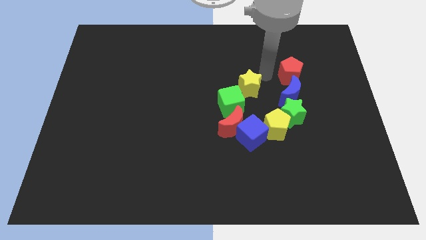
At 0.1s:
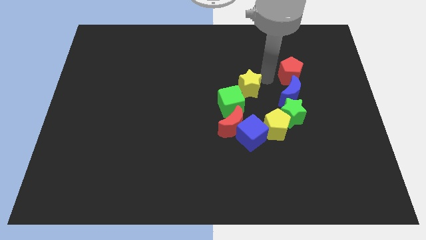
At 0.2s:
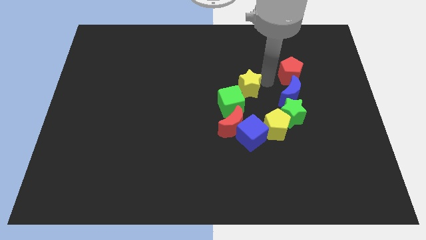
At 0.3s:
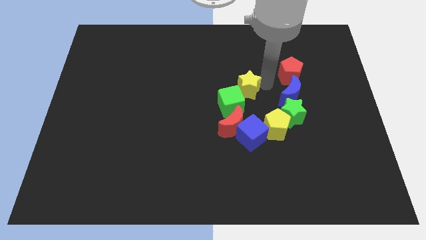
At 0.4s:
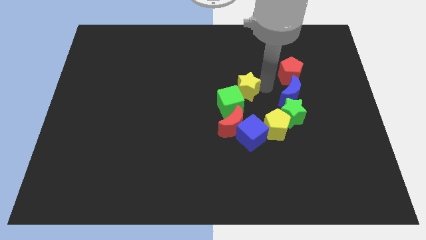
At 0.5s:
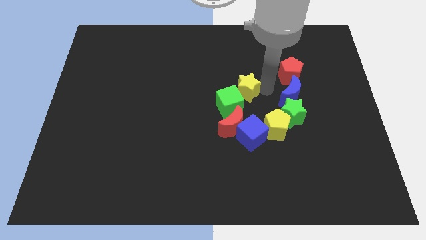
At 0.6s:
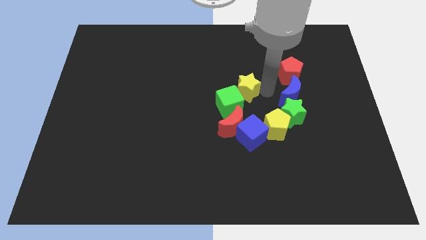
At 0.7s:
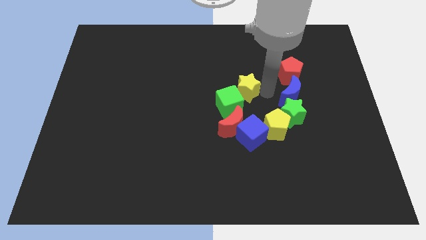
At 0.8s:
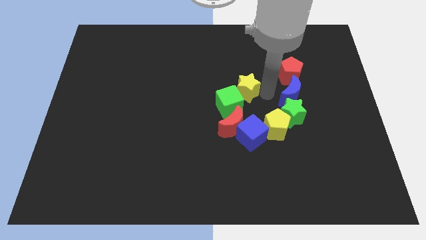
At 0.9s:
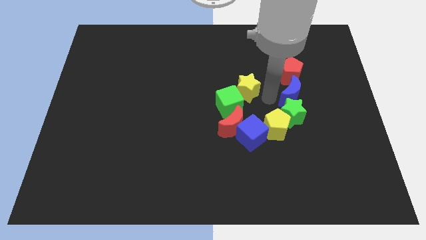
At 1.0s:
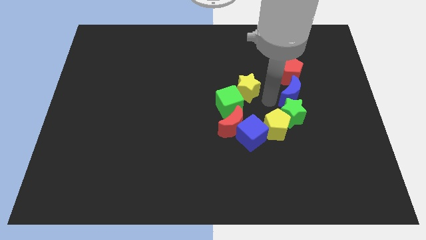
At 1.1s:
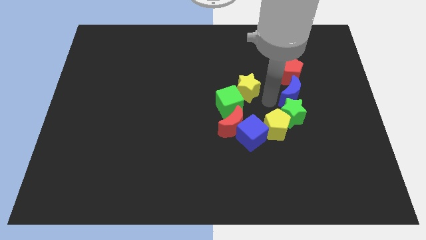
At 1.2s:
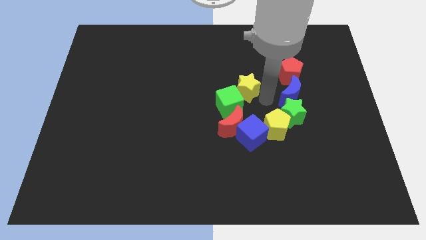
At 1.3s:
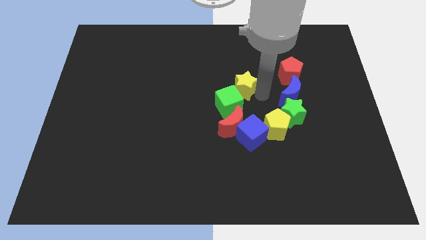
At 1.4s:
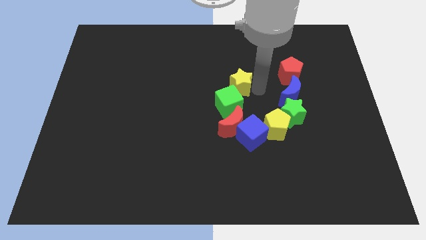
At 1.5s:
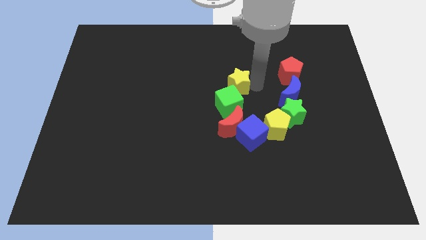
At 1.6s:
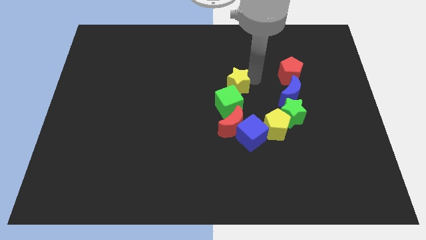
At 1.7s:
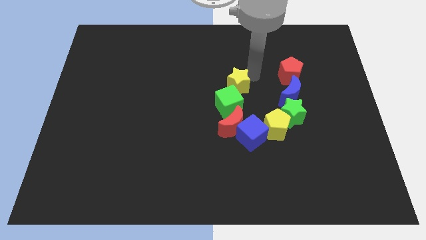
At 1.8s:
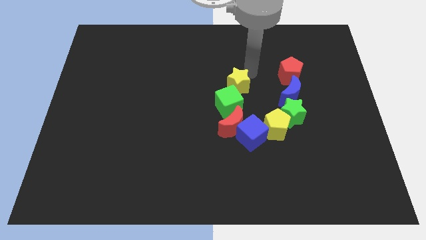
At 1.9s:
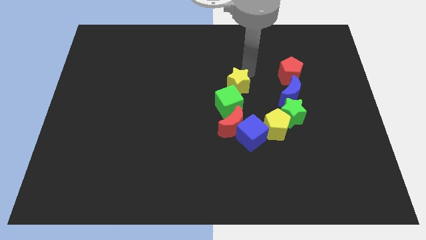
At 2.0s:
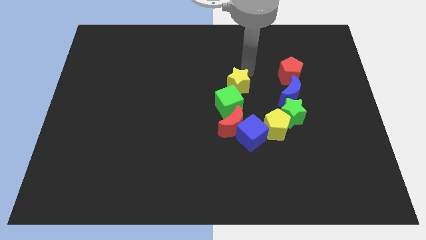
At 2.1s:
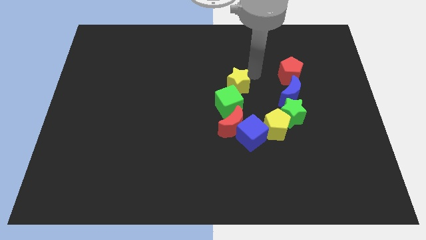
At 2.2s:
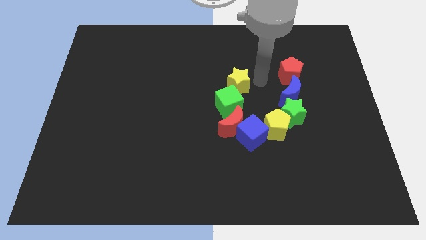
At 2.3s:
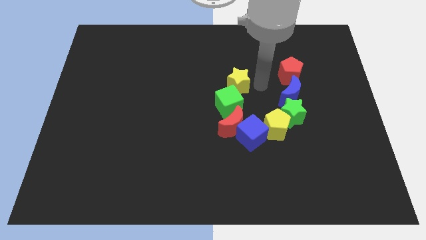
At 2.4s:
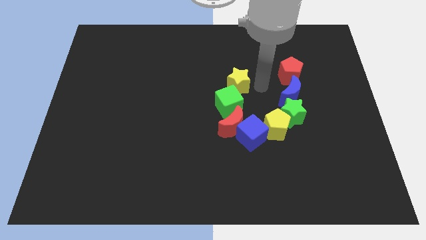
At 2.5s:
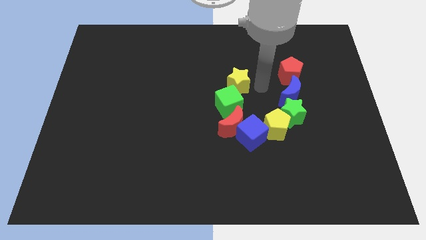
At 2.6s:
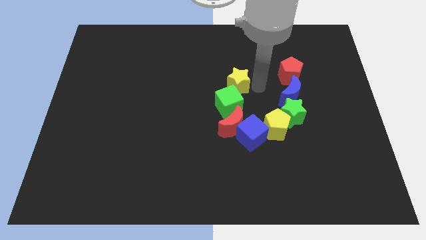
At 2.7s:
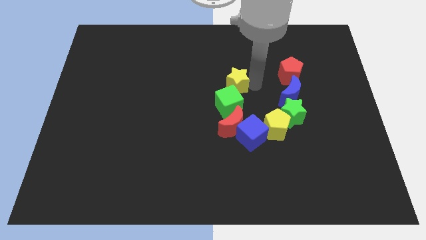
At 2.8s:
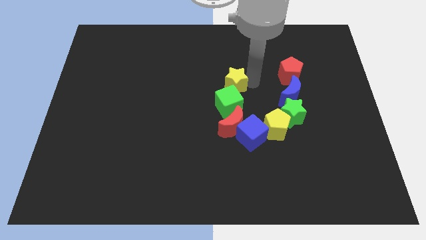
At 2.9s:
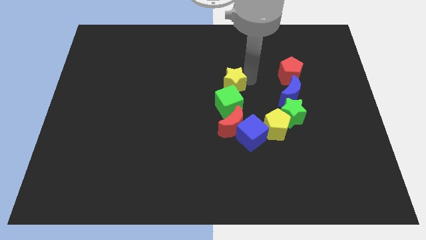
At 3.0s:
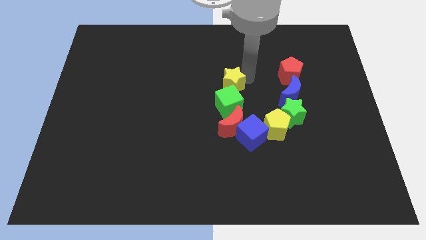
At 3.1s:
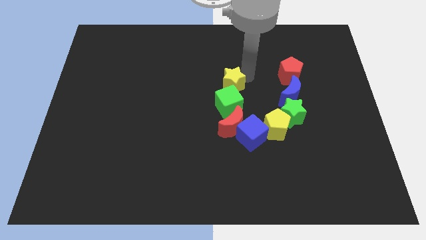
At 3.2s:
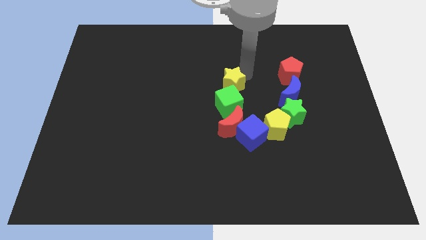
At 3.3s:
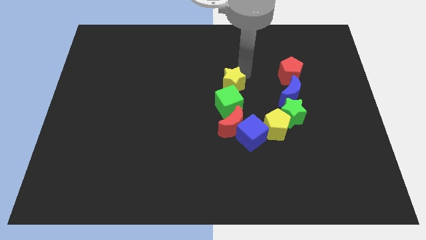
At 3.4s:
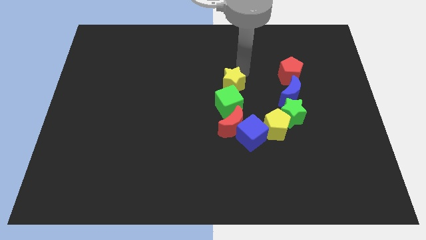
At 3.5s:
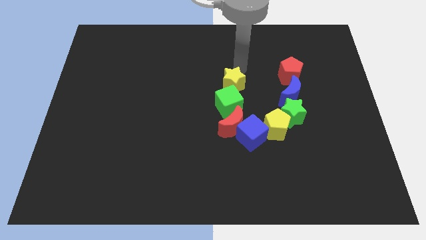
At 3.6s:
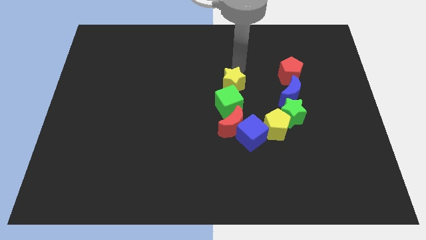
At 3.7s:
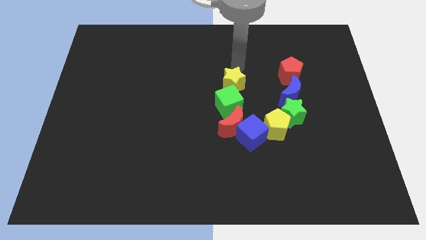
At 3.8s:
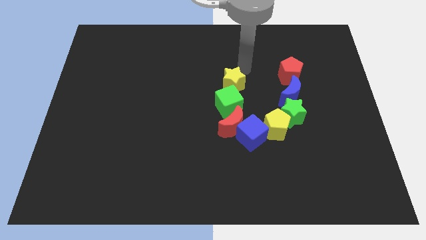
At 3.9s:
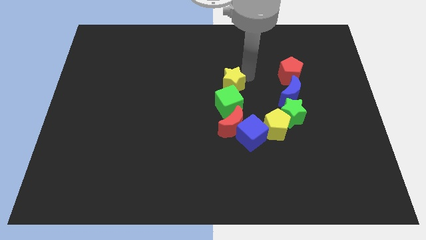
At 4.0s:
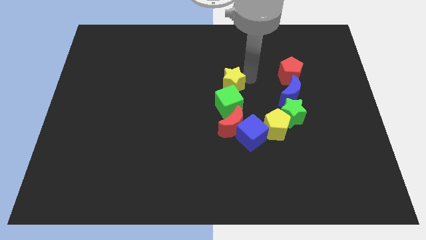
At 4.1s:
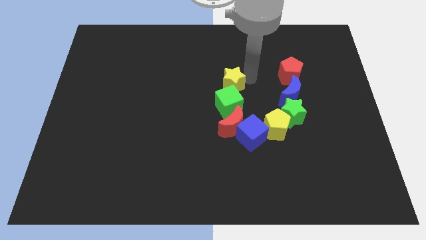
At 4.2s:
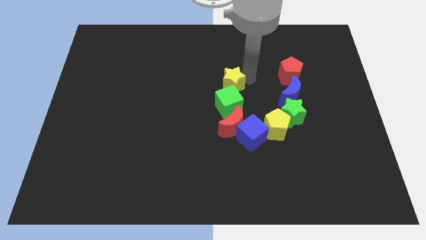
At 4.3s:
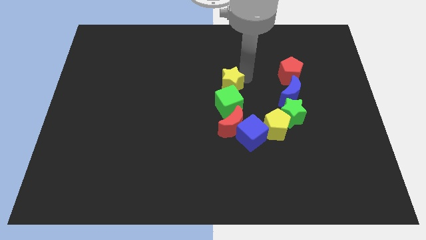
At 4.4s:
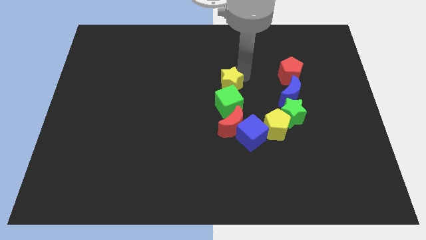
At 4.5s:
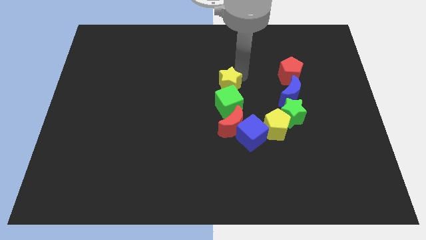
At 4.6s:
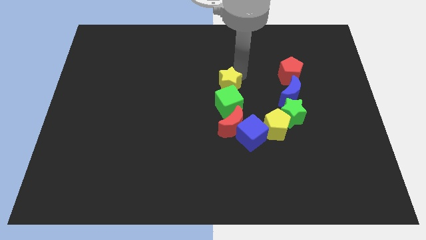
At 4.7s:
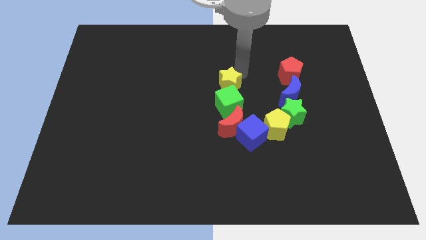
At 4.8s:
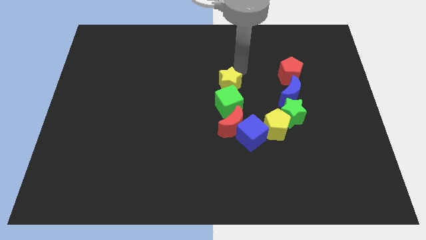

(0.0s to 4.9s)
push yellow star near to green cube

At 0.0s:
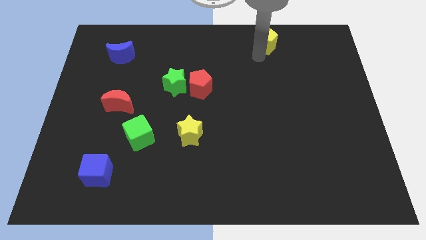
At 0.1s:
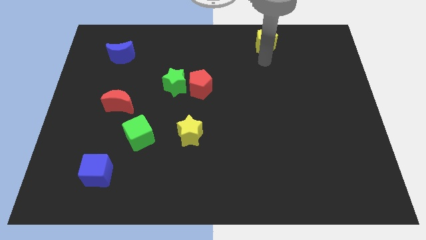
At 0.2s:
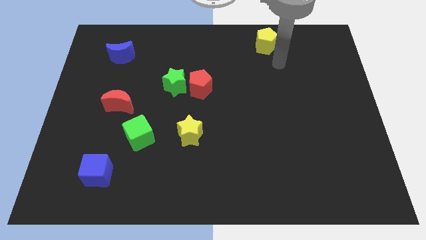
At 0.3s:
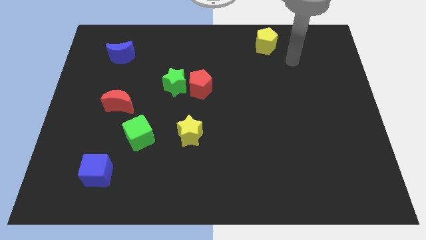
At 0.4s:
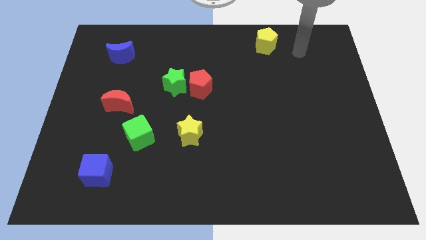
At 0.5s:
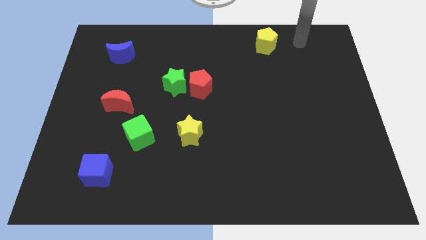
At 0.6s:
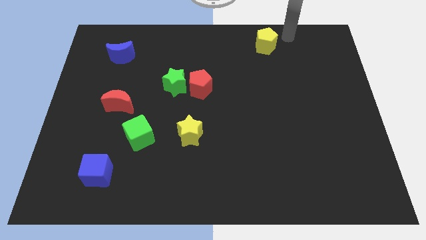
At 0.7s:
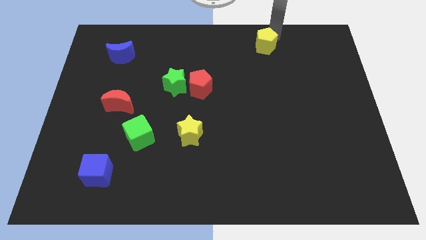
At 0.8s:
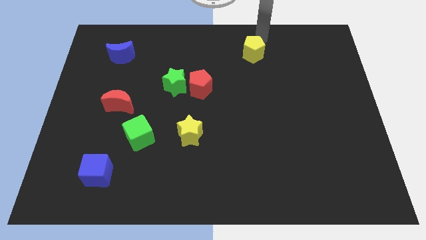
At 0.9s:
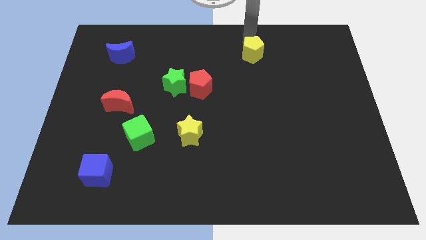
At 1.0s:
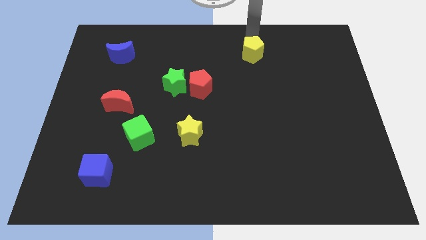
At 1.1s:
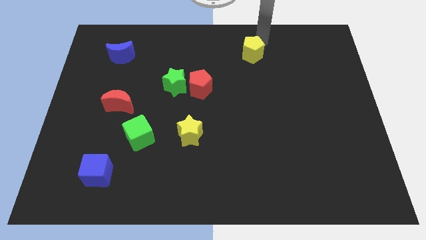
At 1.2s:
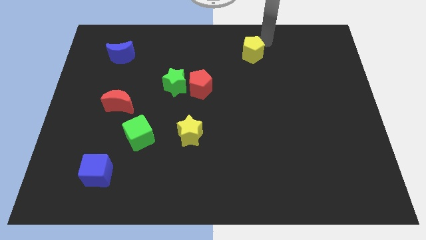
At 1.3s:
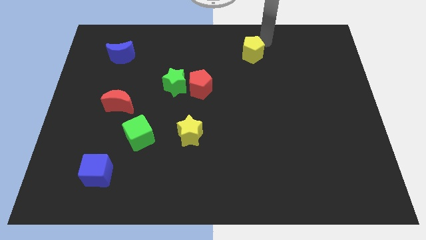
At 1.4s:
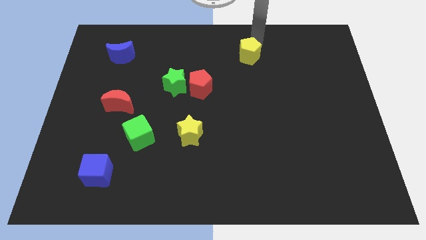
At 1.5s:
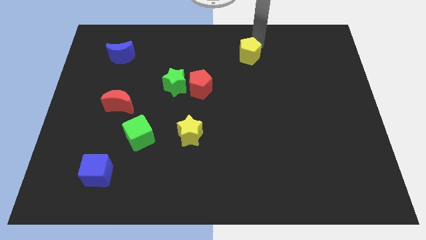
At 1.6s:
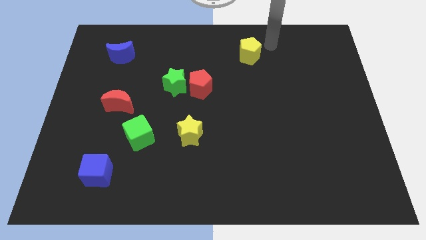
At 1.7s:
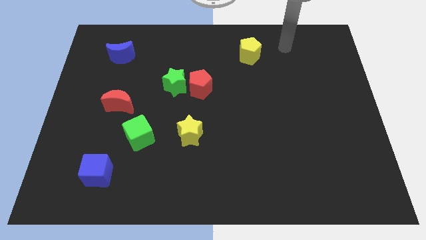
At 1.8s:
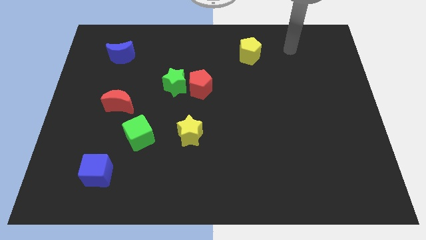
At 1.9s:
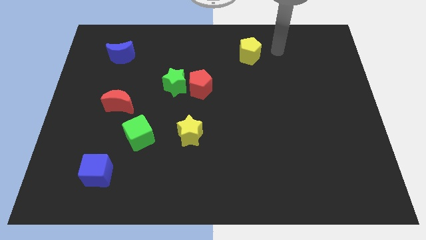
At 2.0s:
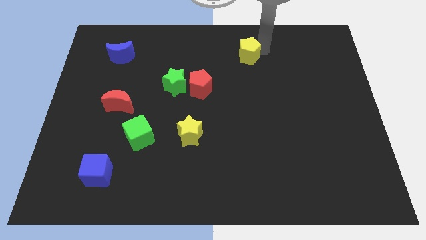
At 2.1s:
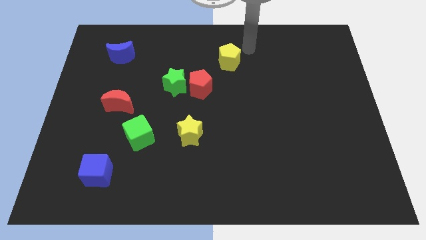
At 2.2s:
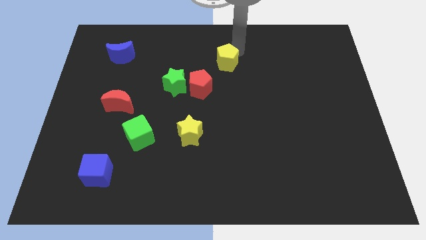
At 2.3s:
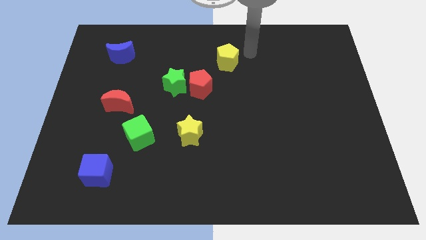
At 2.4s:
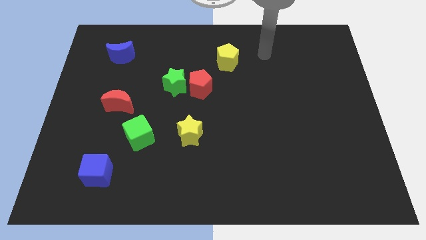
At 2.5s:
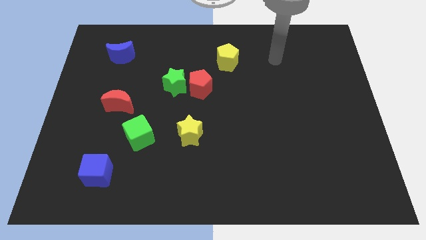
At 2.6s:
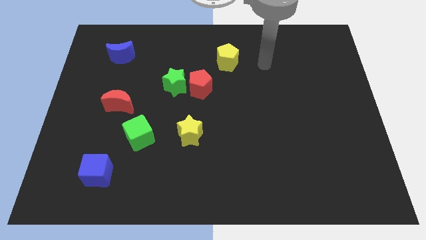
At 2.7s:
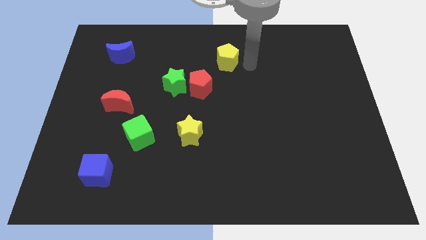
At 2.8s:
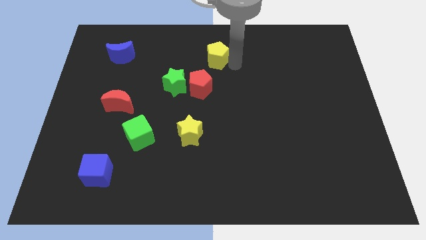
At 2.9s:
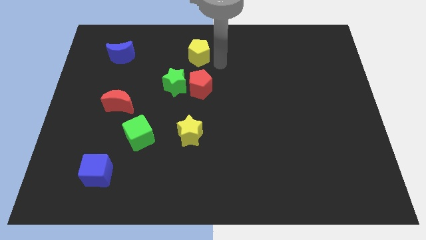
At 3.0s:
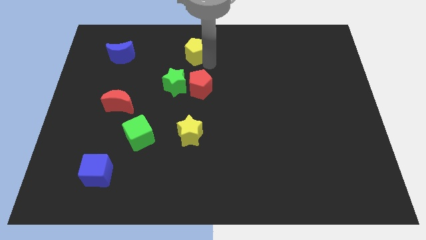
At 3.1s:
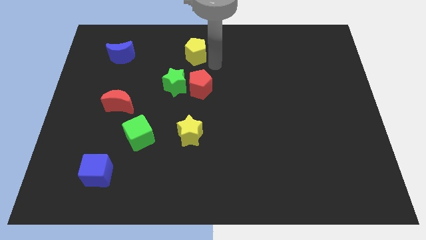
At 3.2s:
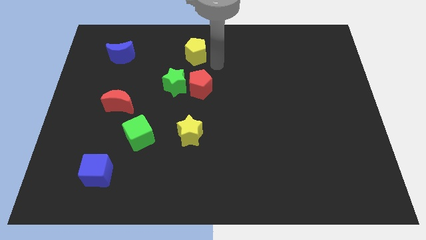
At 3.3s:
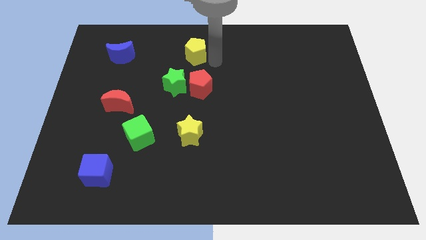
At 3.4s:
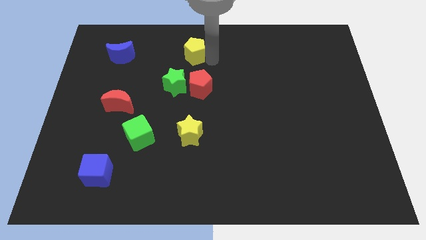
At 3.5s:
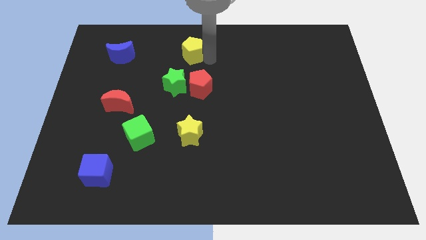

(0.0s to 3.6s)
place the yellow pentagon above the green star and the red pentagon to form a triangle

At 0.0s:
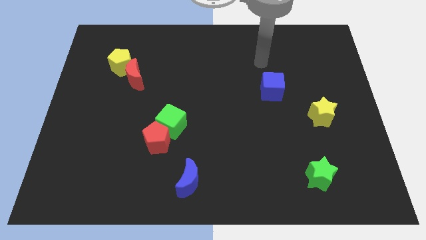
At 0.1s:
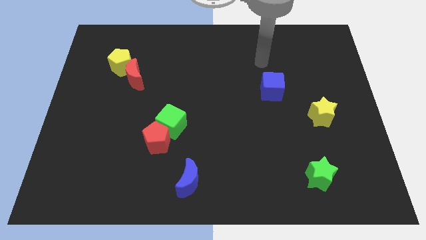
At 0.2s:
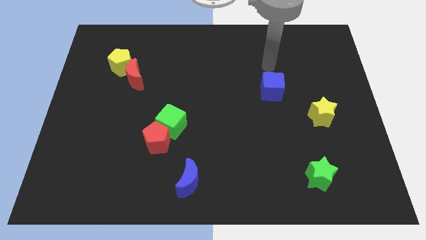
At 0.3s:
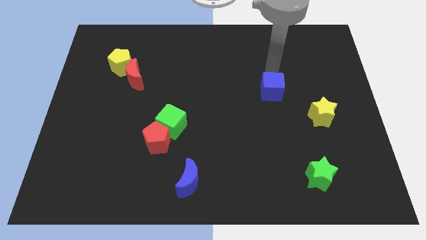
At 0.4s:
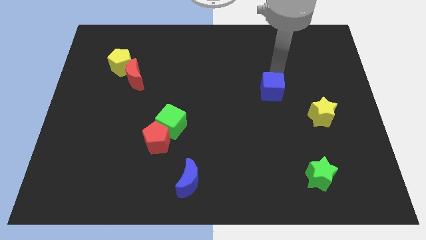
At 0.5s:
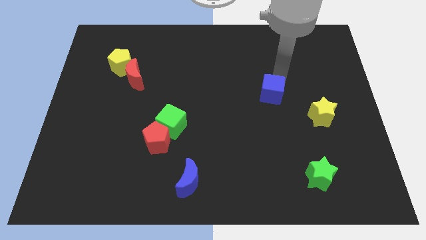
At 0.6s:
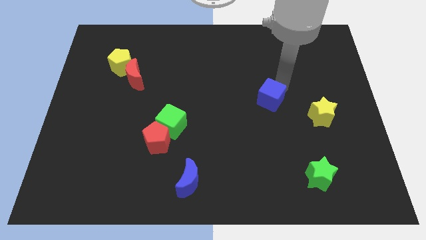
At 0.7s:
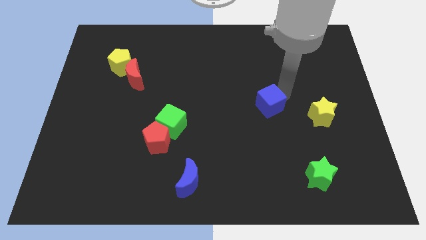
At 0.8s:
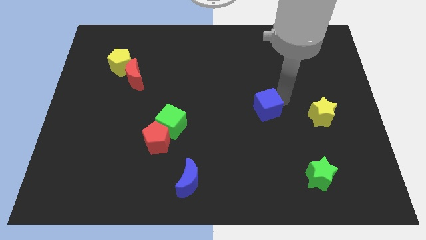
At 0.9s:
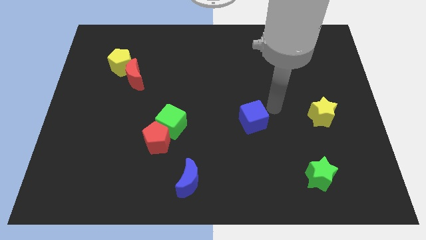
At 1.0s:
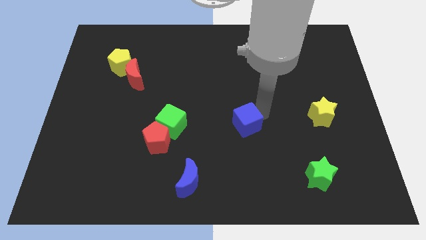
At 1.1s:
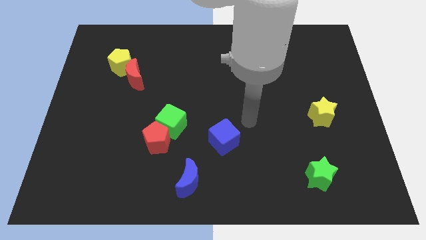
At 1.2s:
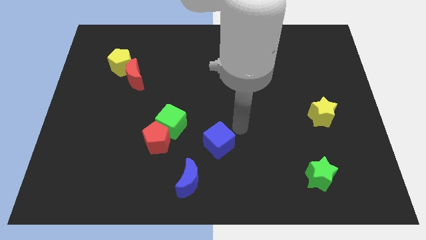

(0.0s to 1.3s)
place blue cube parallel to red pentagon
